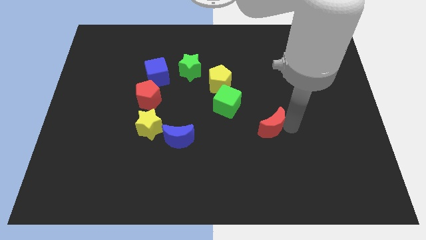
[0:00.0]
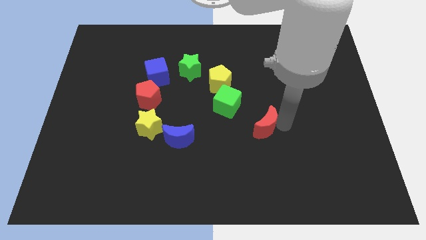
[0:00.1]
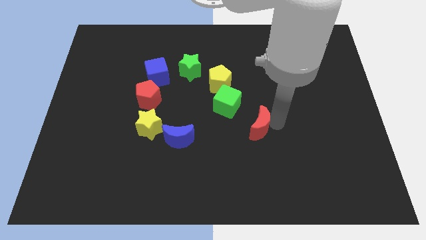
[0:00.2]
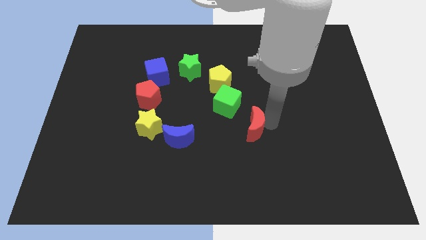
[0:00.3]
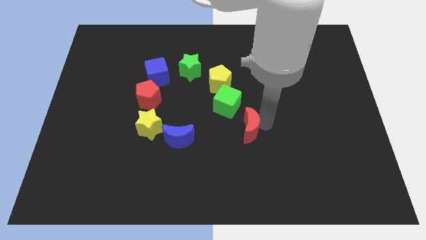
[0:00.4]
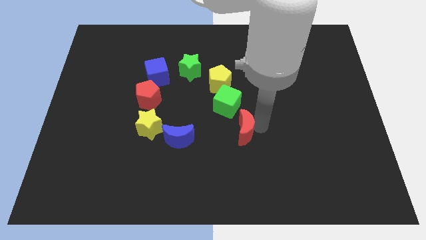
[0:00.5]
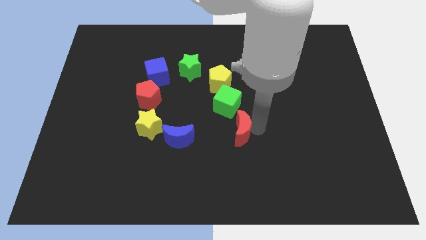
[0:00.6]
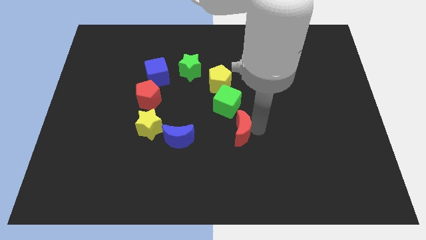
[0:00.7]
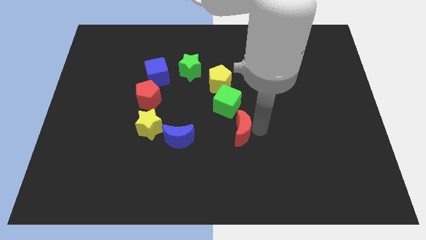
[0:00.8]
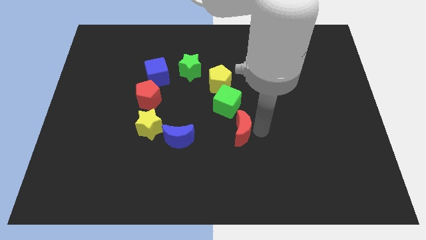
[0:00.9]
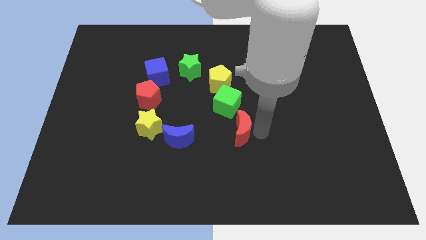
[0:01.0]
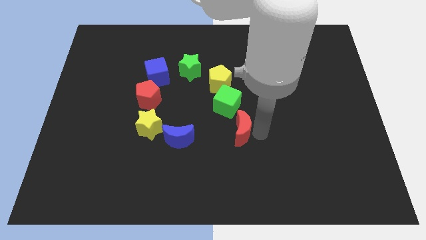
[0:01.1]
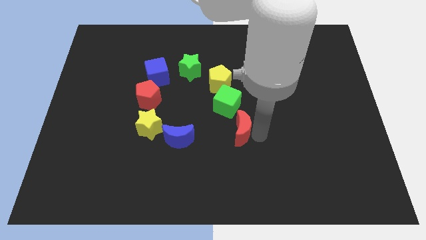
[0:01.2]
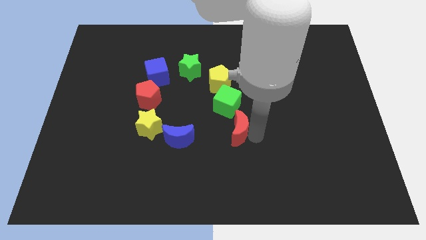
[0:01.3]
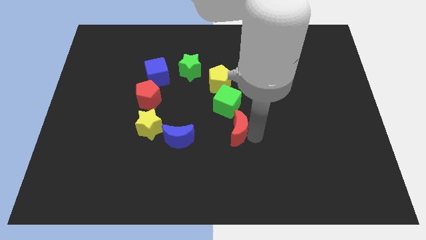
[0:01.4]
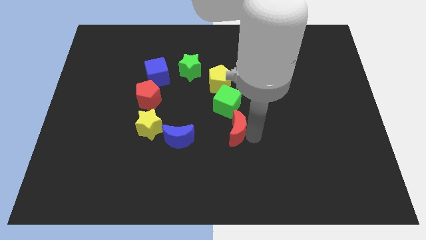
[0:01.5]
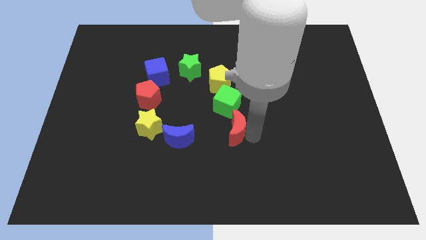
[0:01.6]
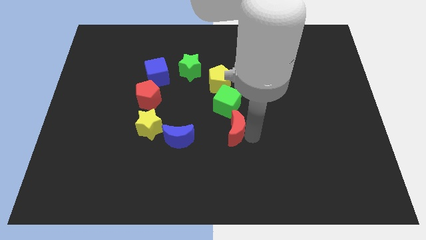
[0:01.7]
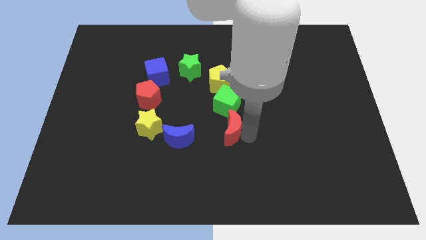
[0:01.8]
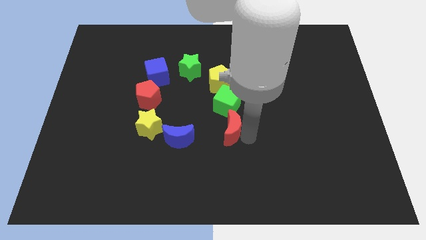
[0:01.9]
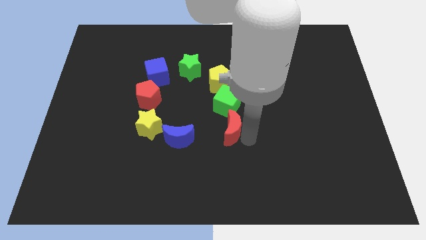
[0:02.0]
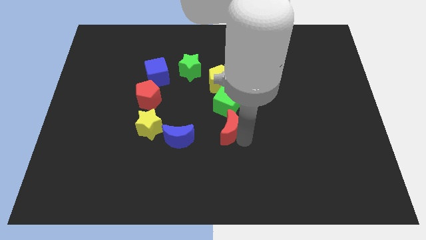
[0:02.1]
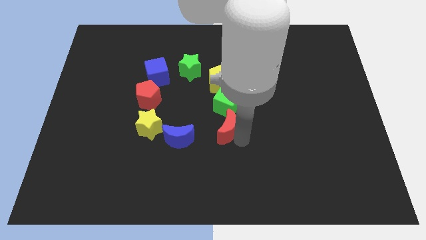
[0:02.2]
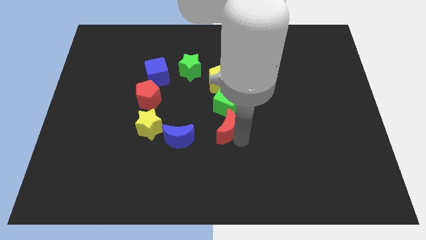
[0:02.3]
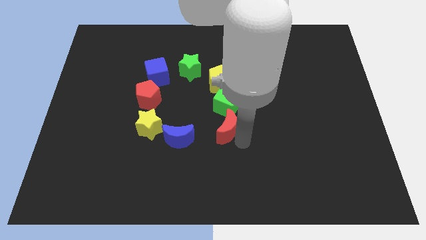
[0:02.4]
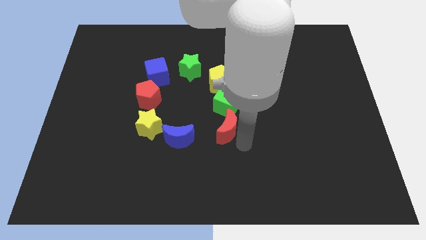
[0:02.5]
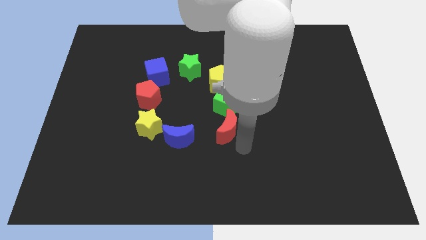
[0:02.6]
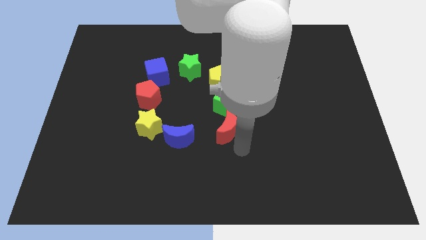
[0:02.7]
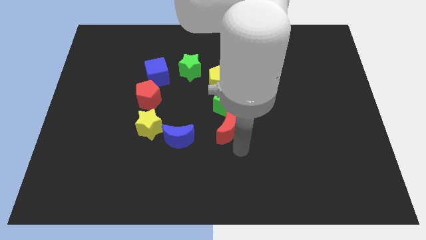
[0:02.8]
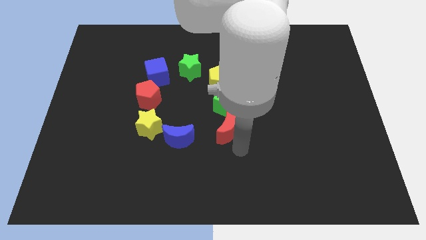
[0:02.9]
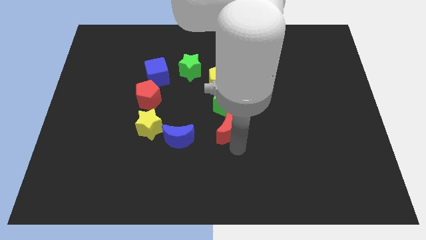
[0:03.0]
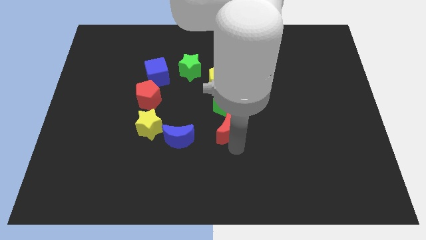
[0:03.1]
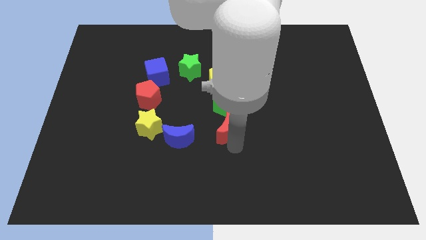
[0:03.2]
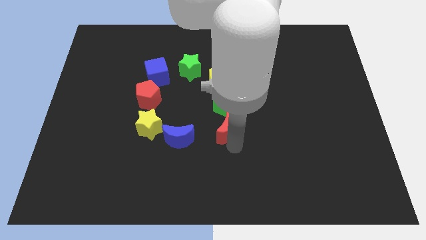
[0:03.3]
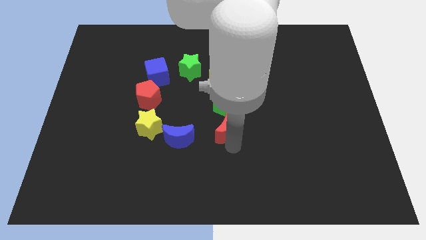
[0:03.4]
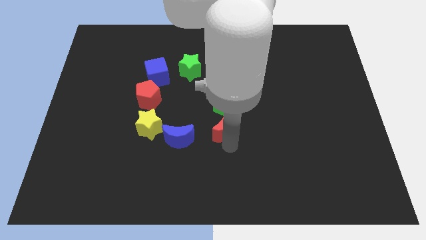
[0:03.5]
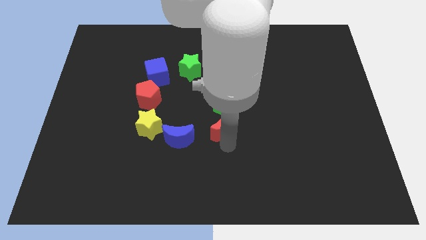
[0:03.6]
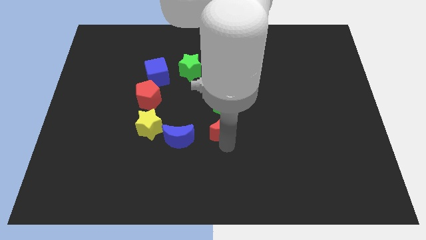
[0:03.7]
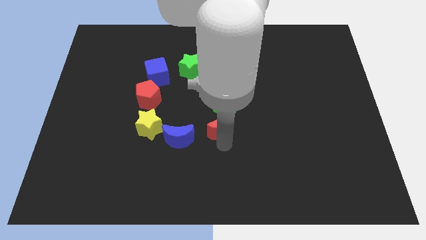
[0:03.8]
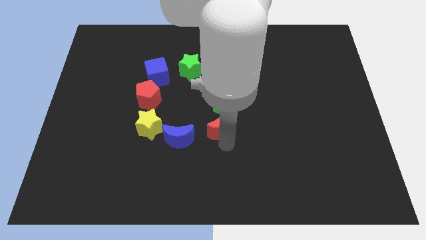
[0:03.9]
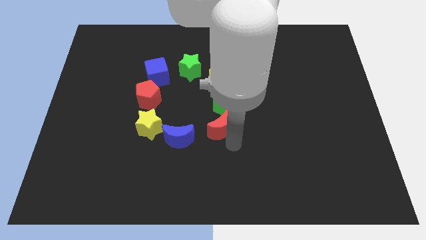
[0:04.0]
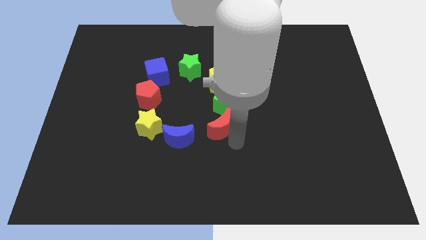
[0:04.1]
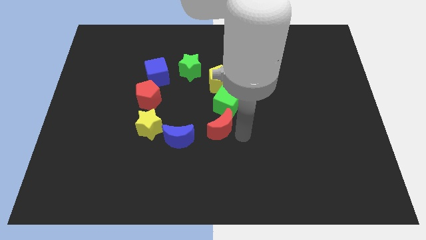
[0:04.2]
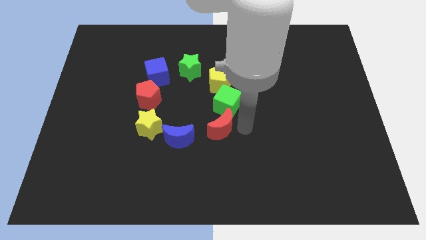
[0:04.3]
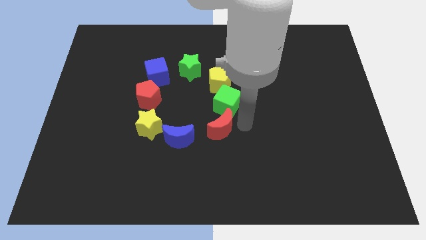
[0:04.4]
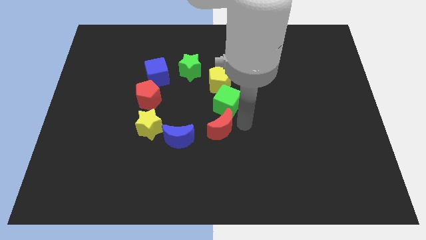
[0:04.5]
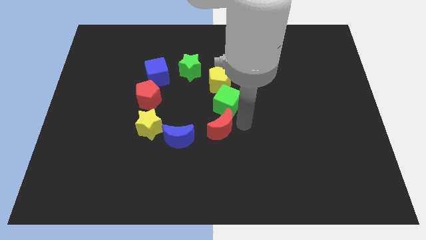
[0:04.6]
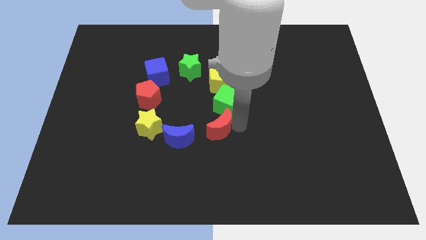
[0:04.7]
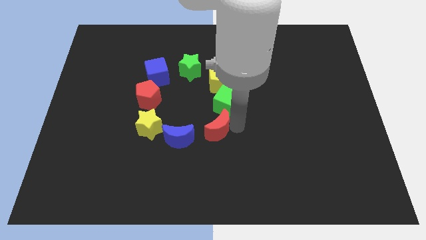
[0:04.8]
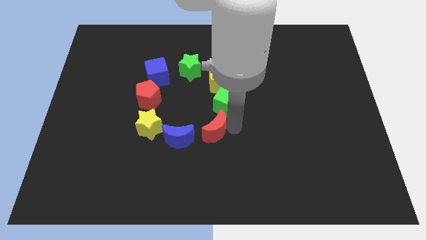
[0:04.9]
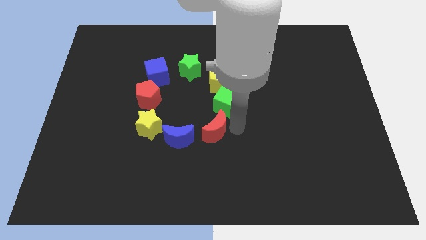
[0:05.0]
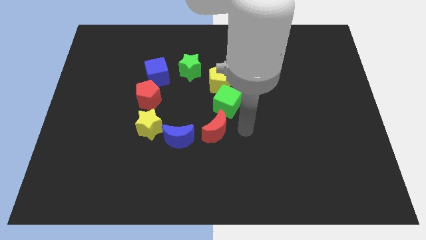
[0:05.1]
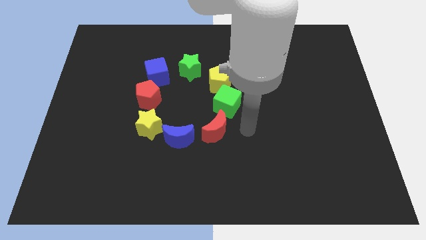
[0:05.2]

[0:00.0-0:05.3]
put the red moon at the right side of the blue moon

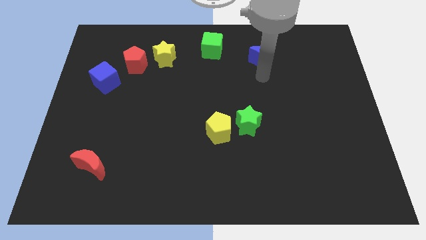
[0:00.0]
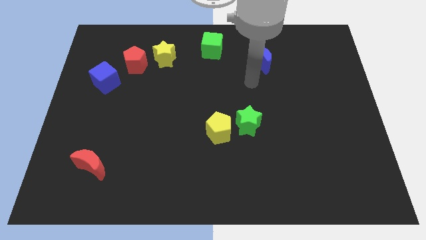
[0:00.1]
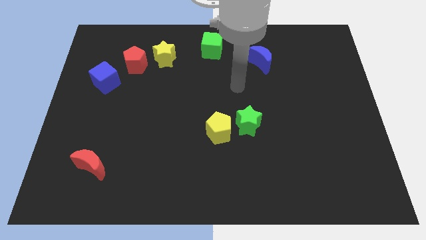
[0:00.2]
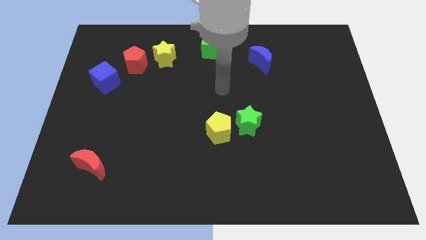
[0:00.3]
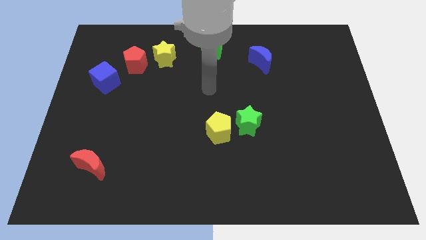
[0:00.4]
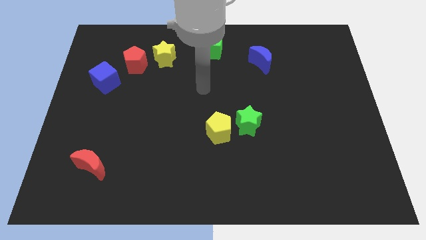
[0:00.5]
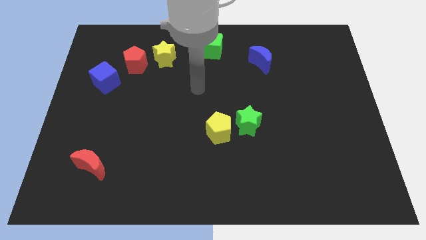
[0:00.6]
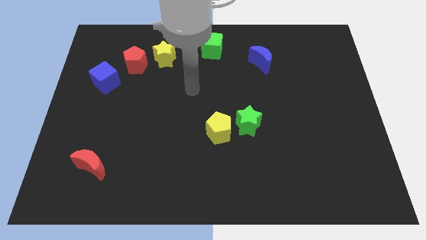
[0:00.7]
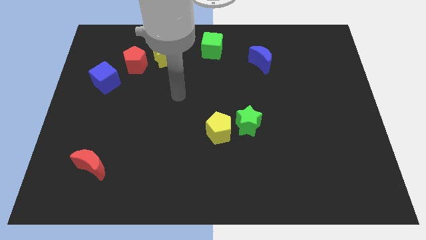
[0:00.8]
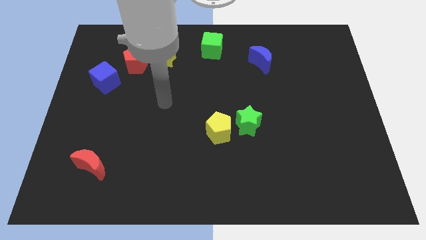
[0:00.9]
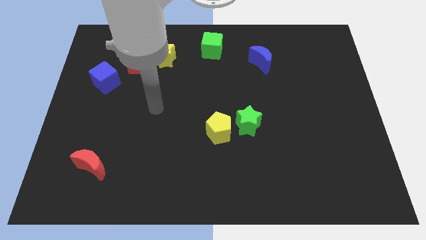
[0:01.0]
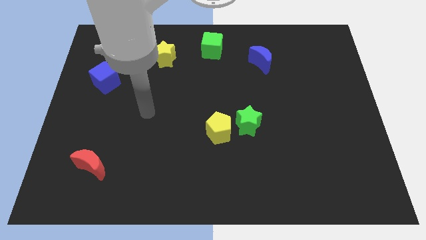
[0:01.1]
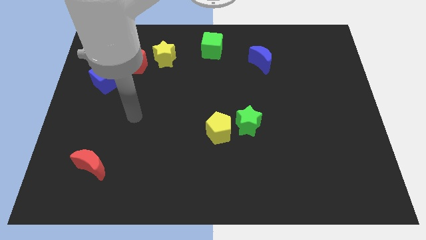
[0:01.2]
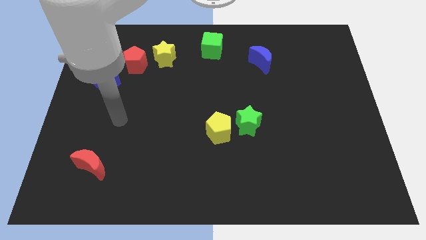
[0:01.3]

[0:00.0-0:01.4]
move your arm away from the blue crescent

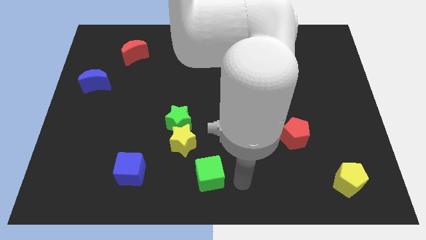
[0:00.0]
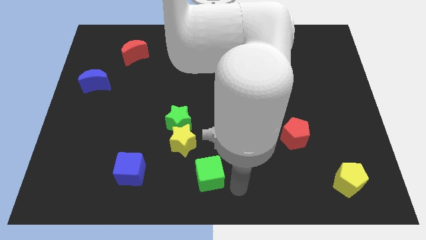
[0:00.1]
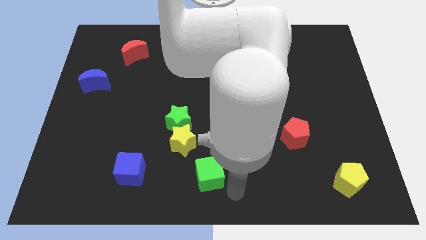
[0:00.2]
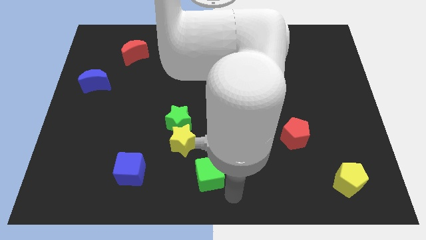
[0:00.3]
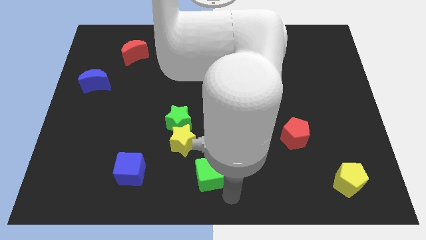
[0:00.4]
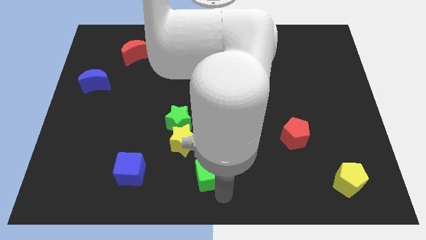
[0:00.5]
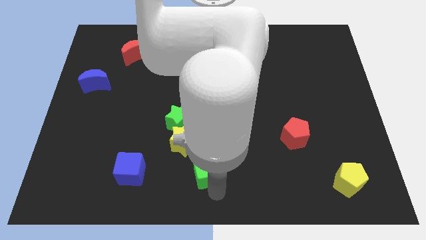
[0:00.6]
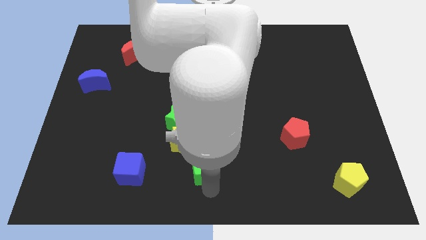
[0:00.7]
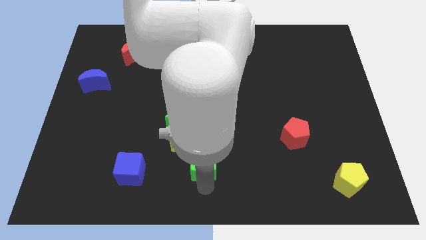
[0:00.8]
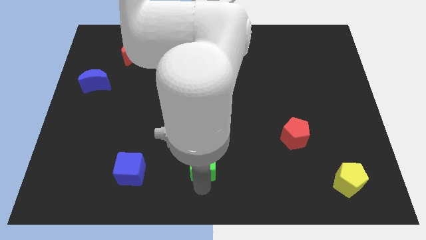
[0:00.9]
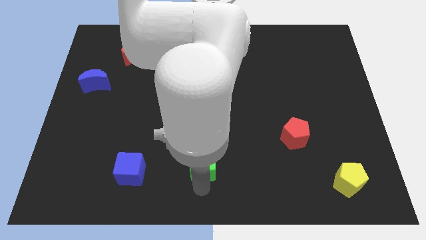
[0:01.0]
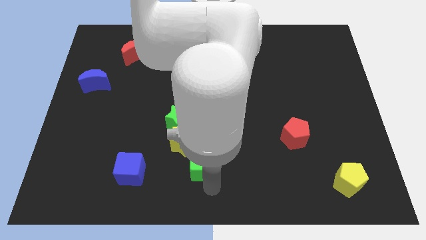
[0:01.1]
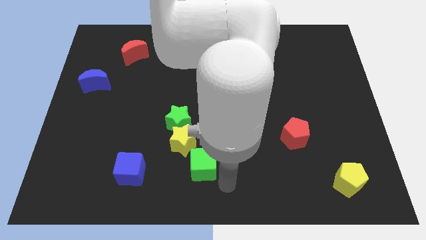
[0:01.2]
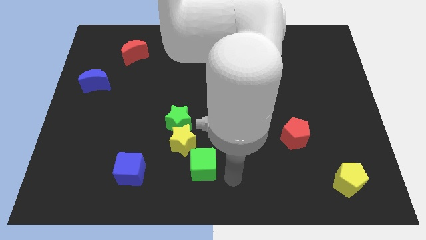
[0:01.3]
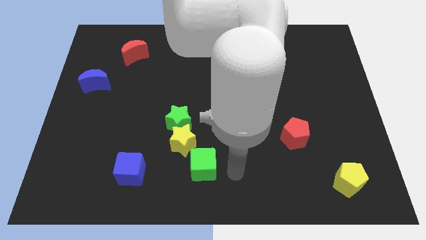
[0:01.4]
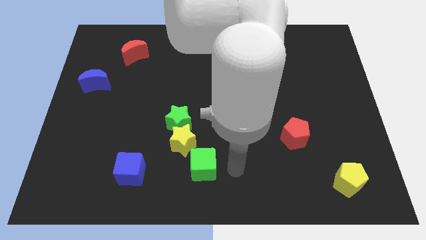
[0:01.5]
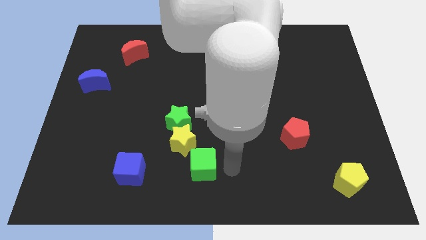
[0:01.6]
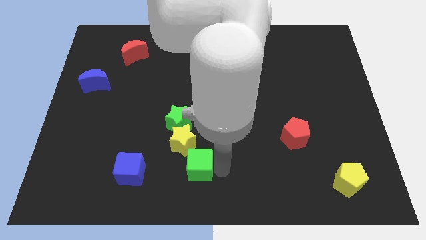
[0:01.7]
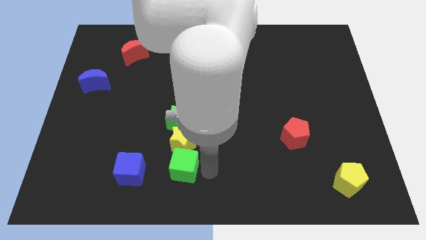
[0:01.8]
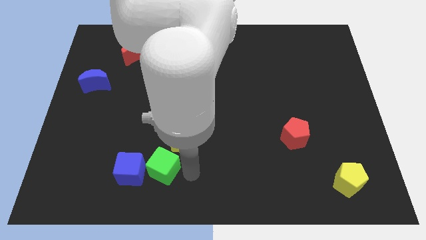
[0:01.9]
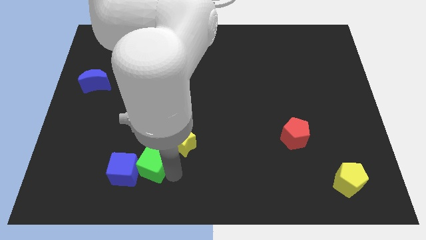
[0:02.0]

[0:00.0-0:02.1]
move the green cube near to the blue cube

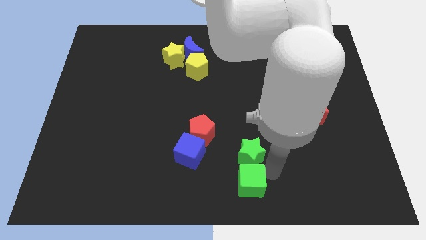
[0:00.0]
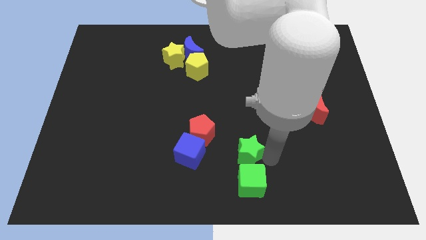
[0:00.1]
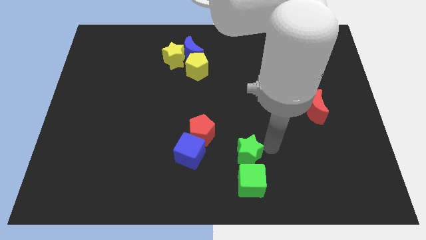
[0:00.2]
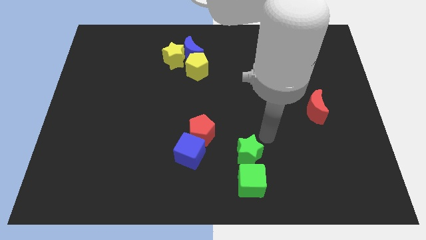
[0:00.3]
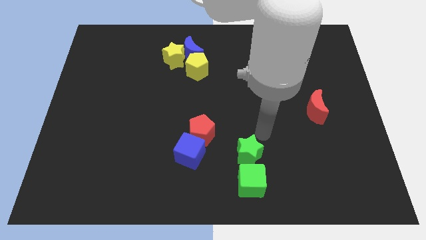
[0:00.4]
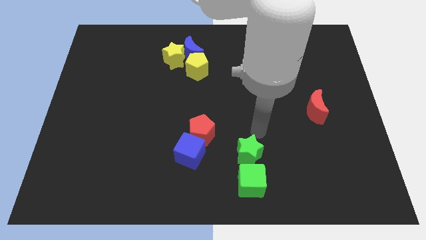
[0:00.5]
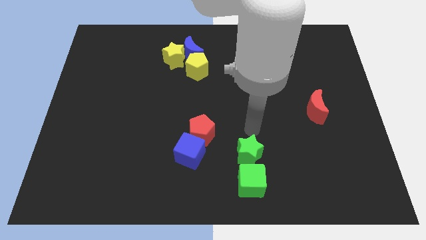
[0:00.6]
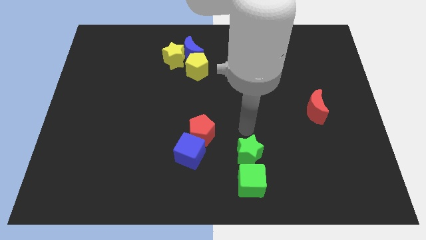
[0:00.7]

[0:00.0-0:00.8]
place arm on the top of green star
